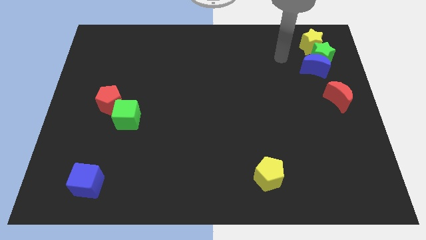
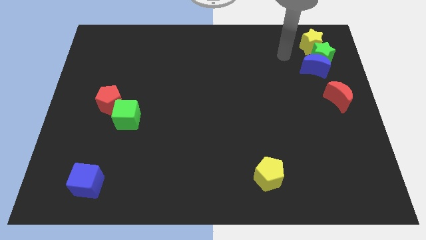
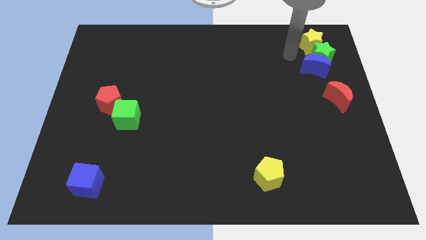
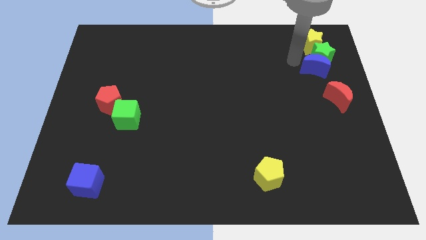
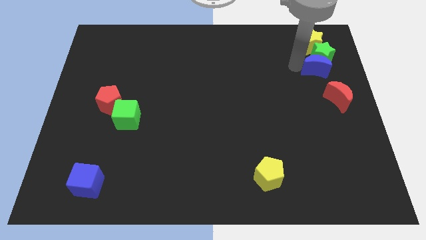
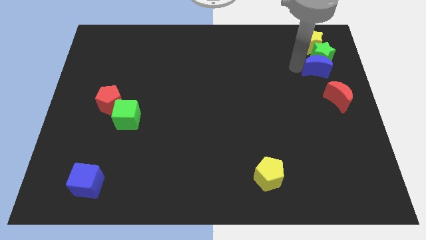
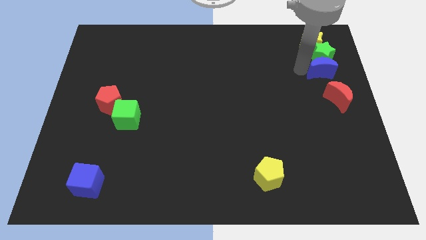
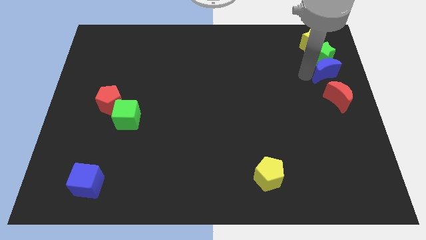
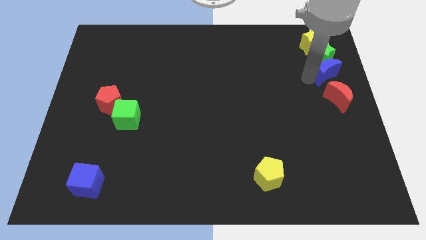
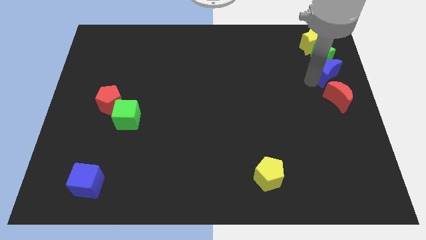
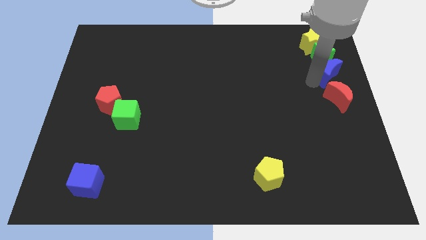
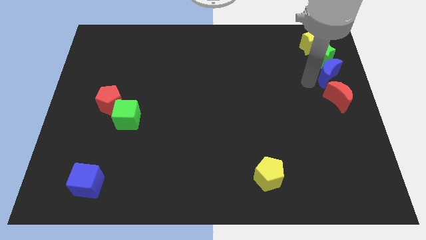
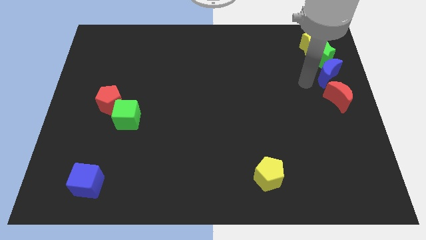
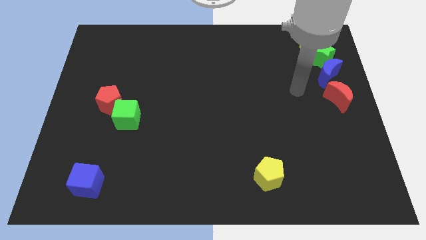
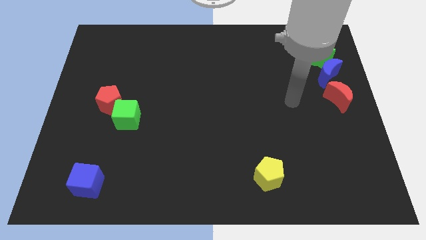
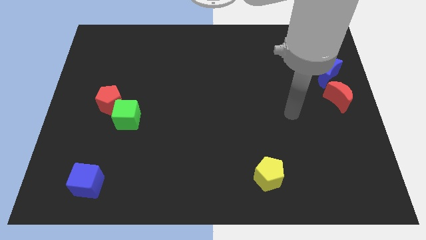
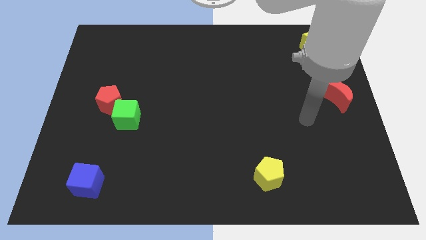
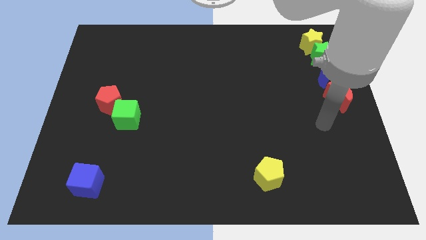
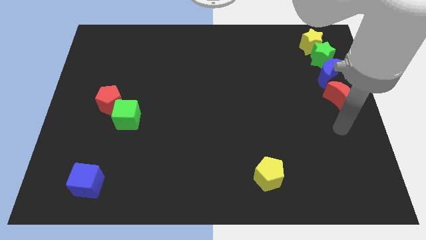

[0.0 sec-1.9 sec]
adjust the blue crescent to form a vertical line with a group of blocks

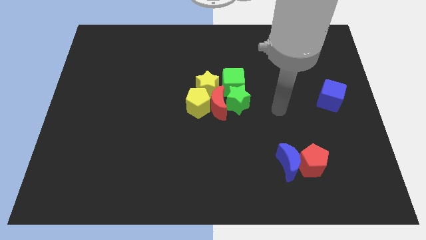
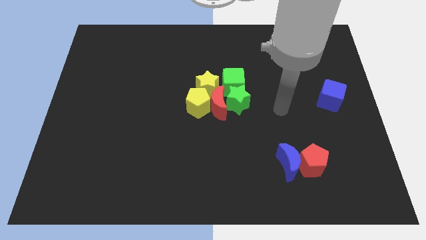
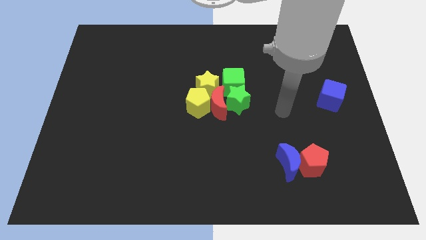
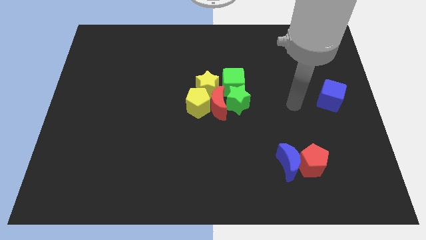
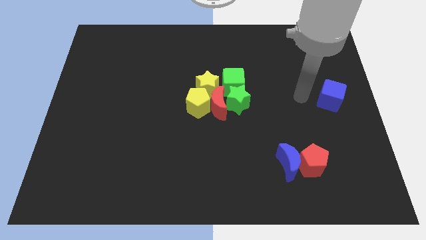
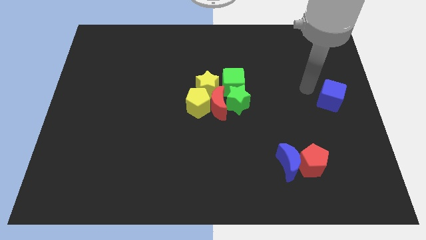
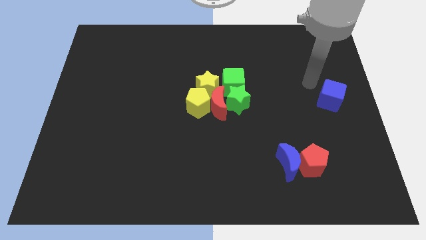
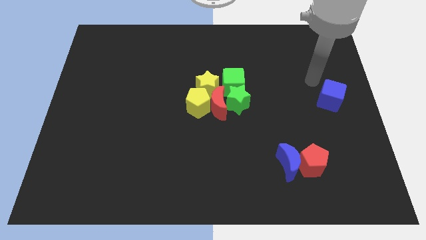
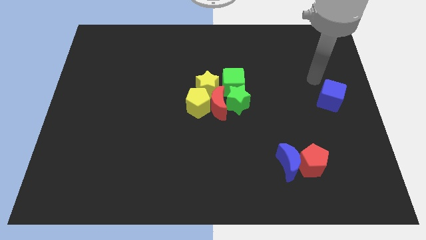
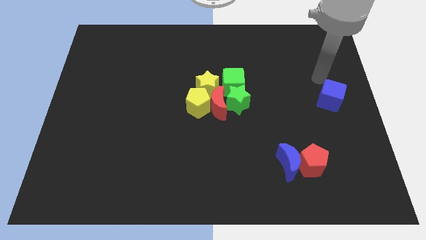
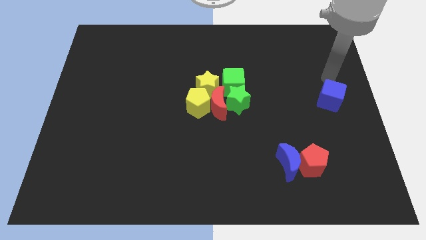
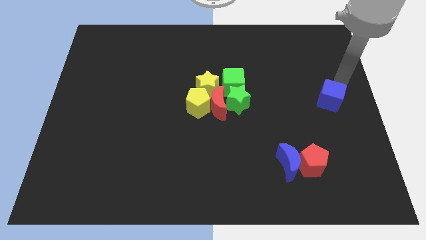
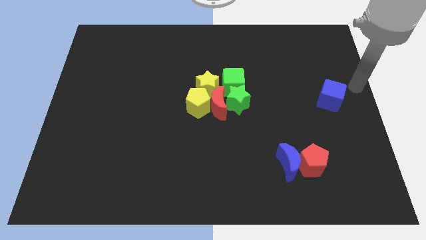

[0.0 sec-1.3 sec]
move your arm towards the right side of the board

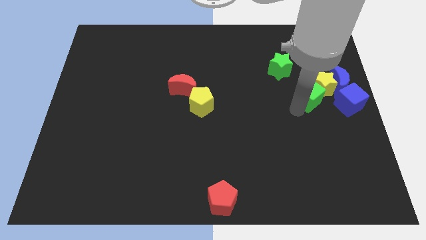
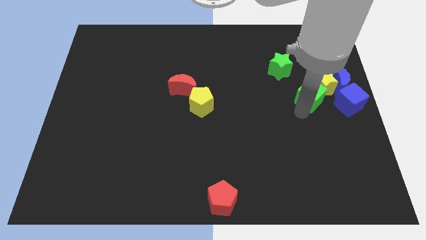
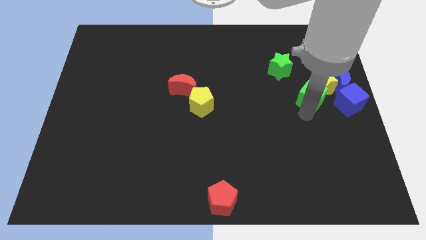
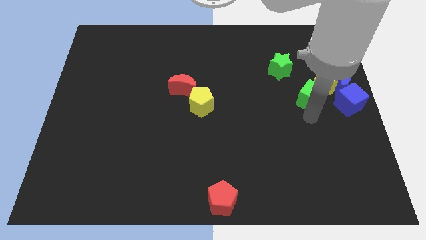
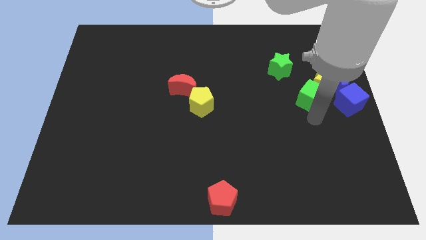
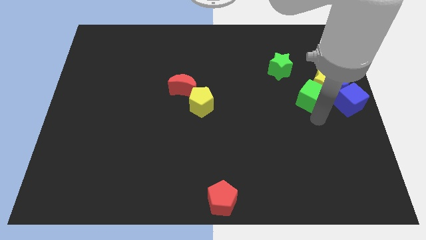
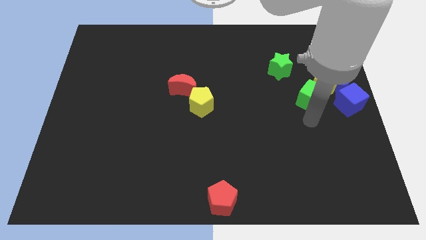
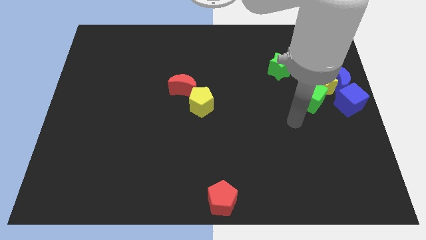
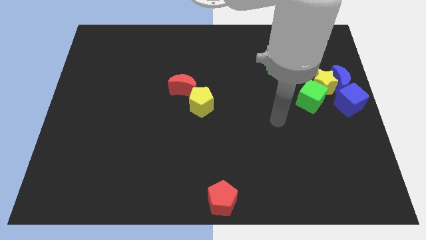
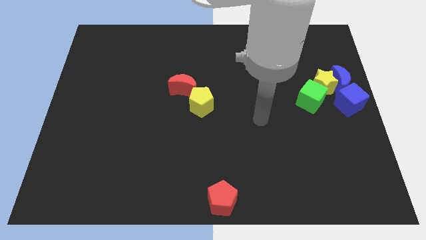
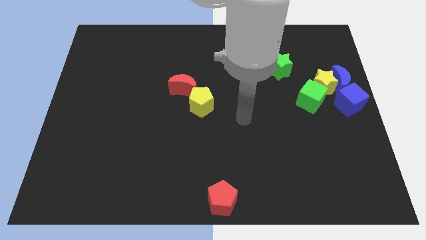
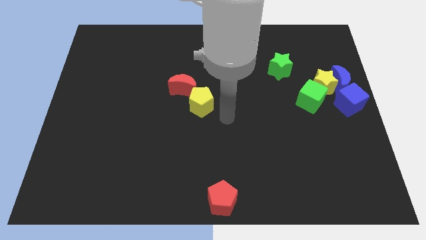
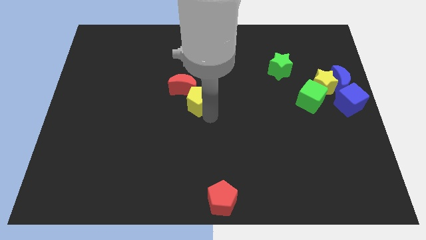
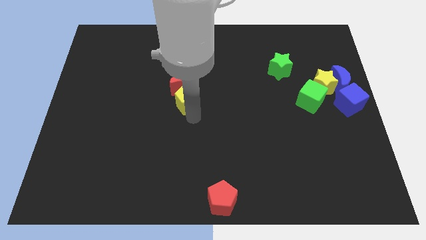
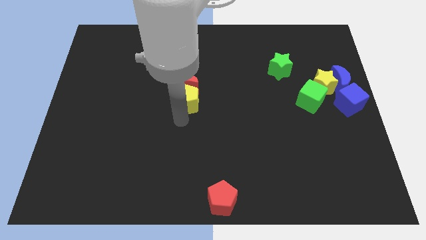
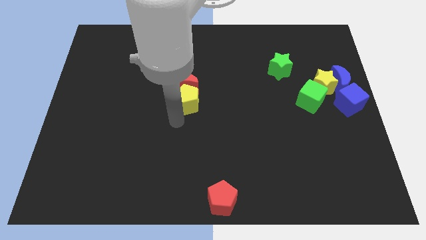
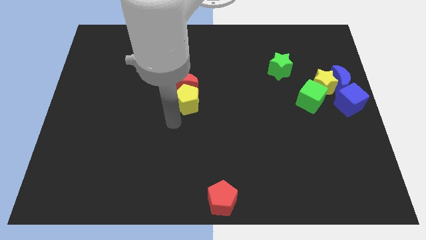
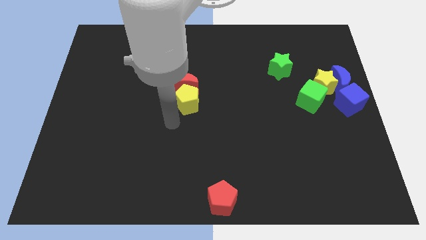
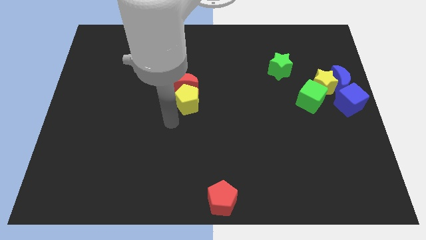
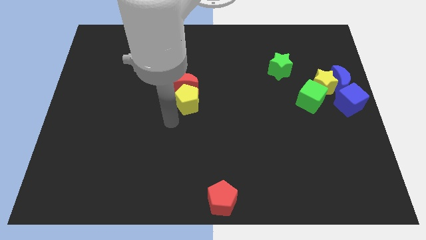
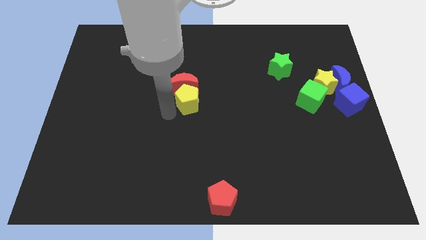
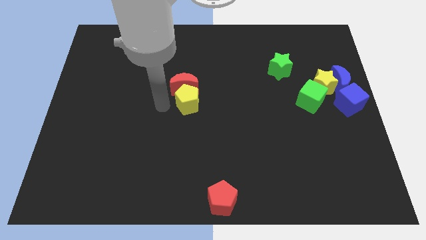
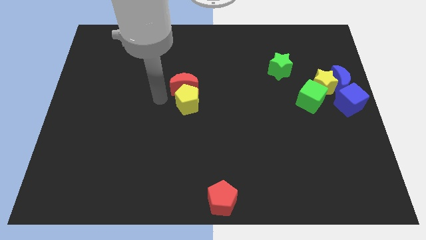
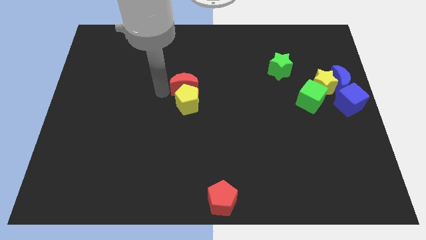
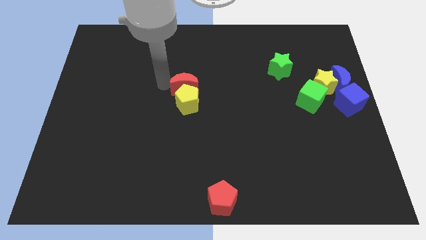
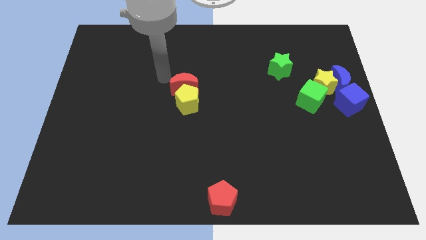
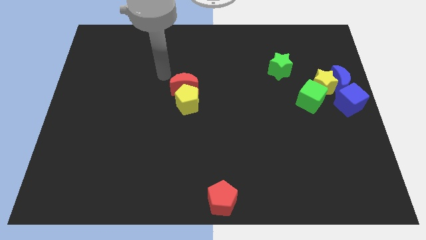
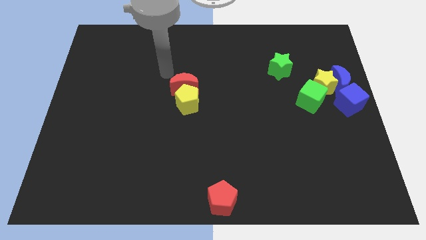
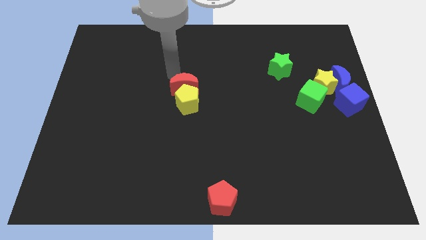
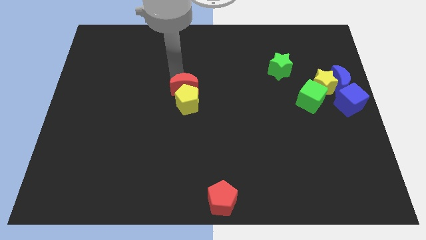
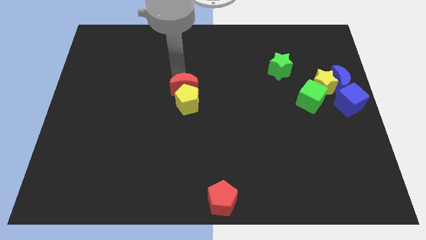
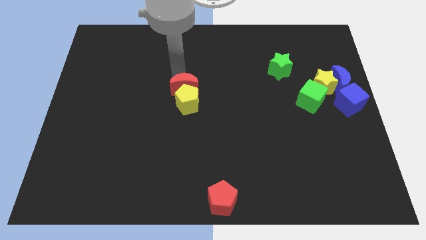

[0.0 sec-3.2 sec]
touch the top side of the red crescent

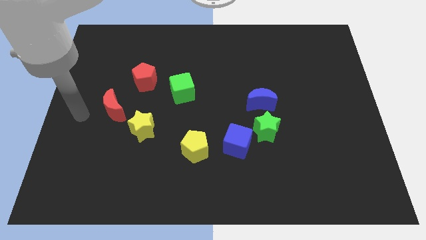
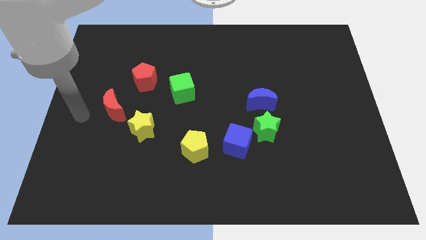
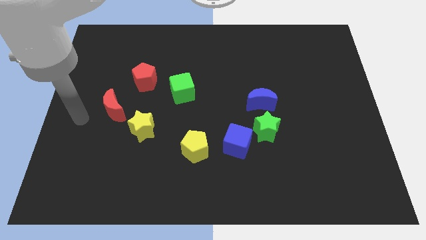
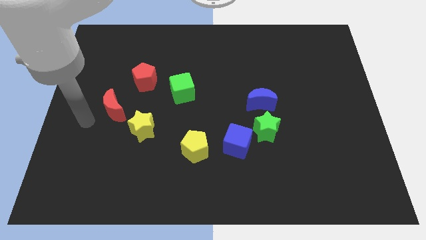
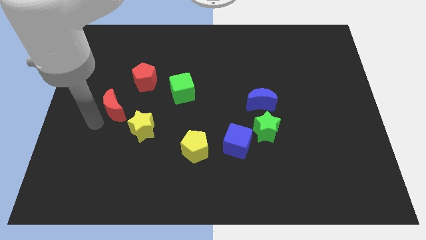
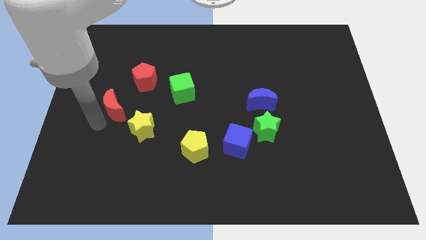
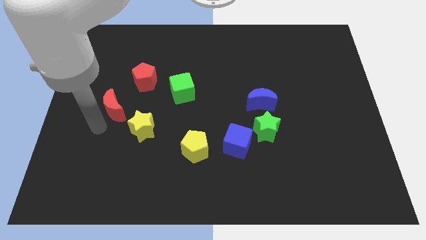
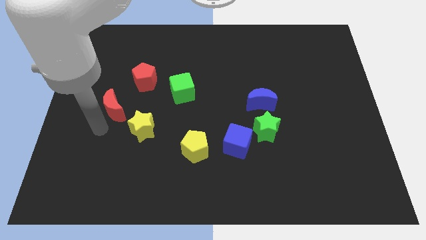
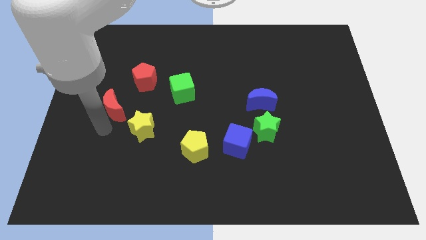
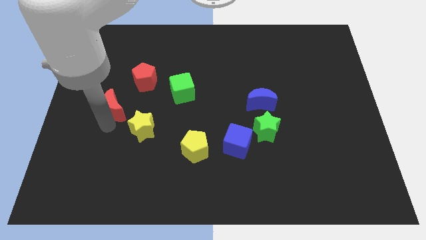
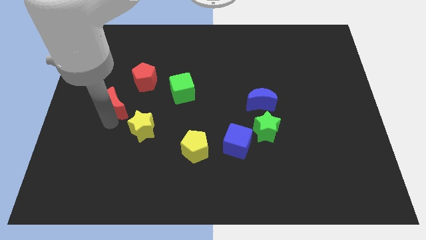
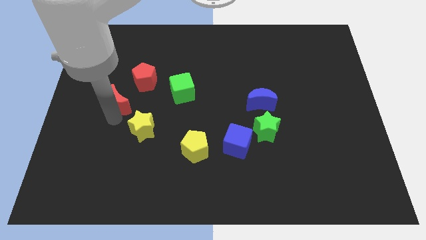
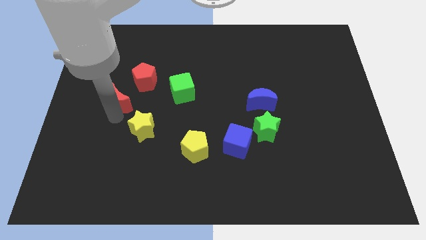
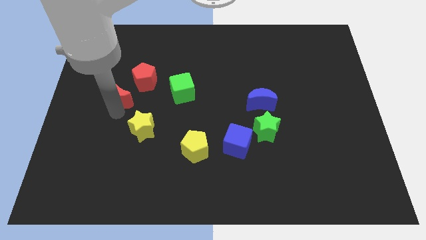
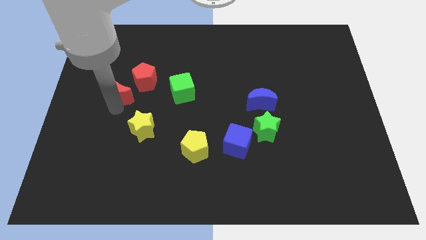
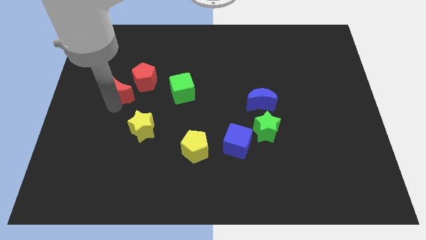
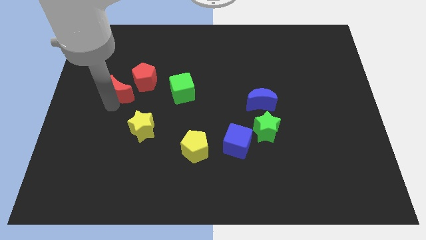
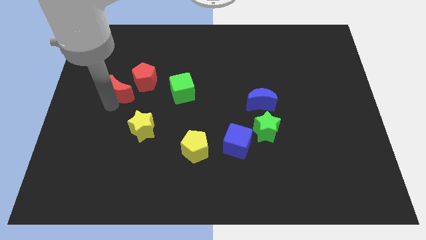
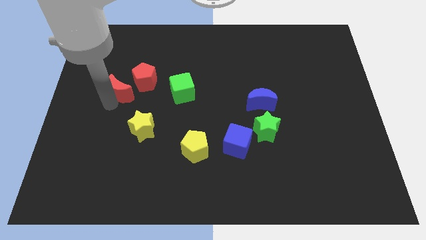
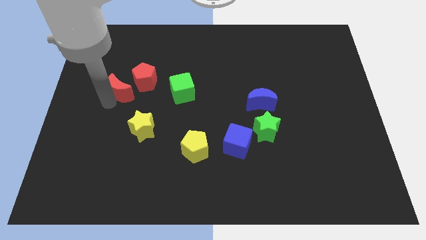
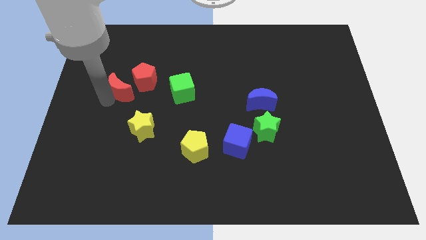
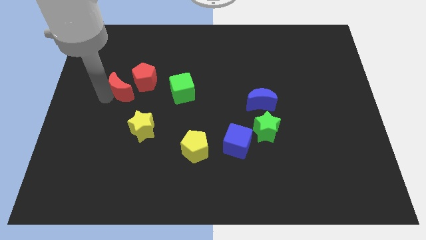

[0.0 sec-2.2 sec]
drag the red crescent to the bottom left of red pentagon
